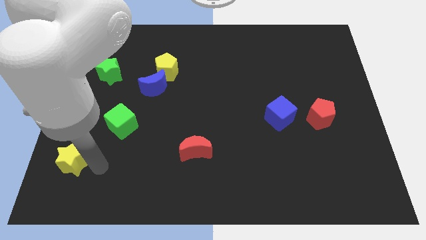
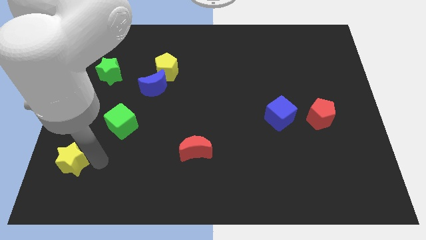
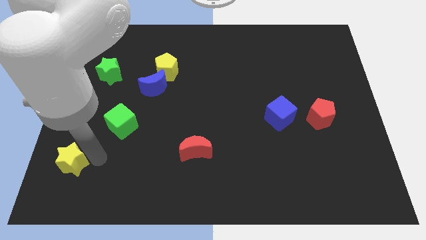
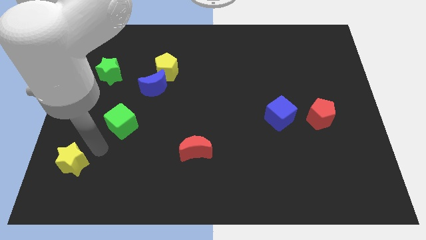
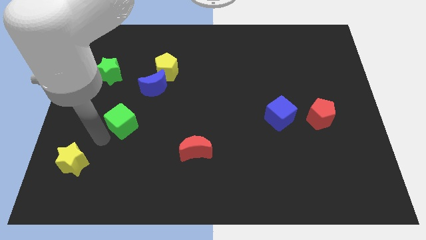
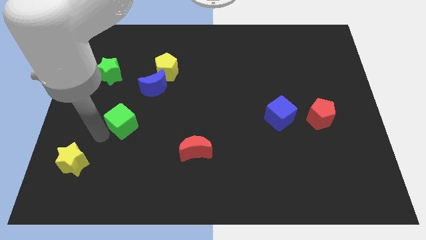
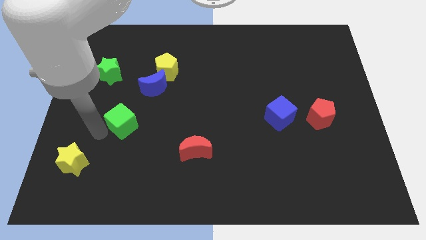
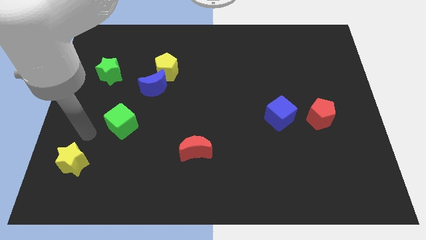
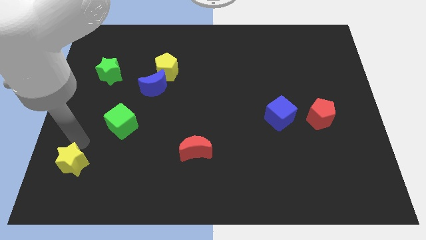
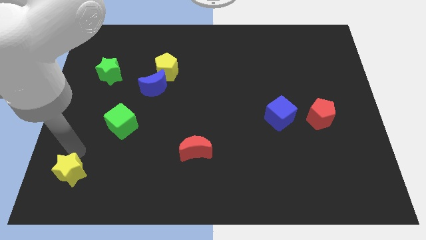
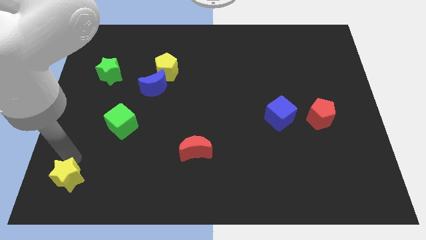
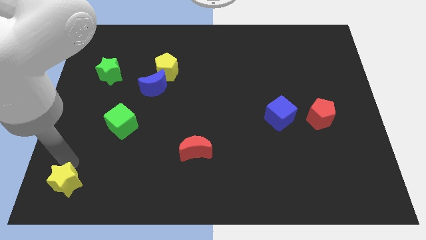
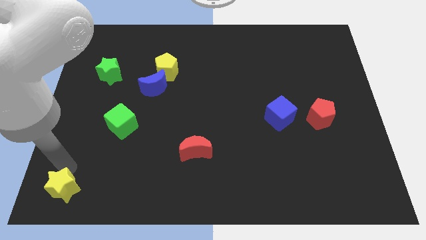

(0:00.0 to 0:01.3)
move yellow star slightly down

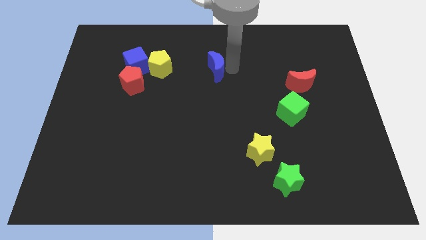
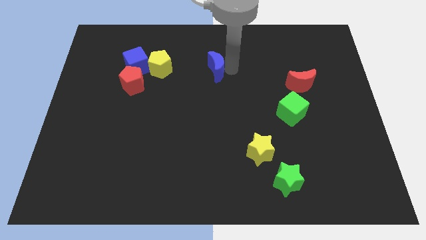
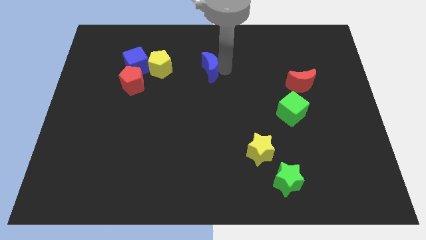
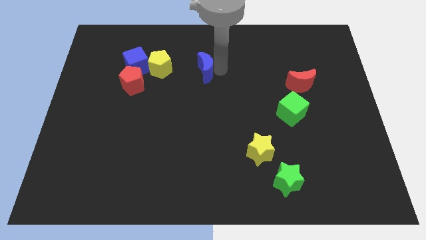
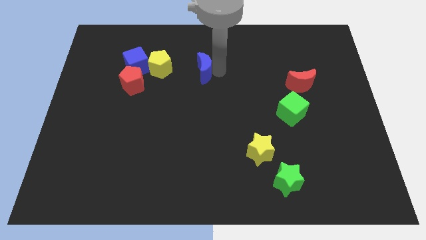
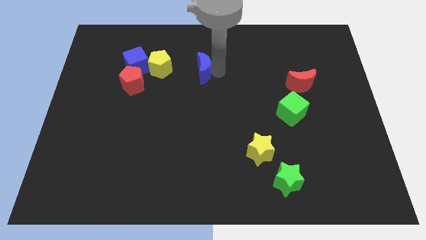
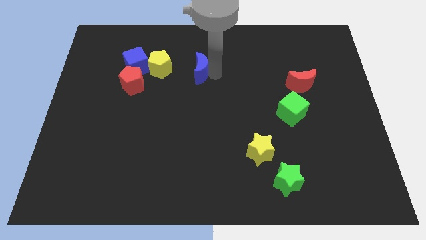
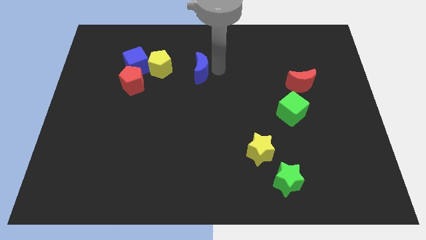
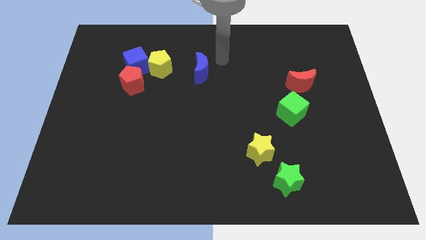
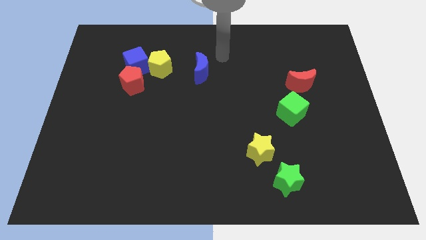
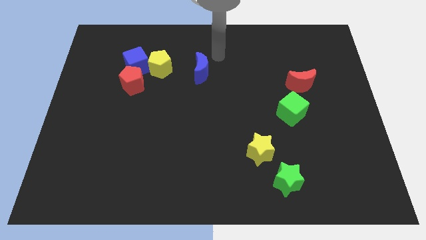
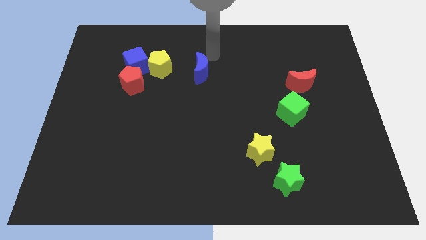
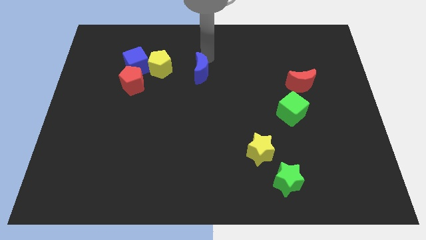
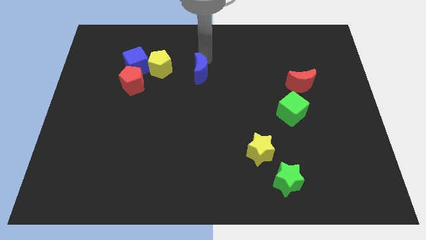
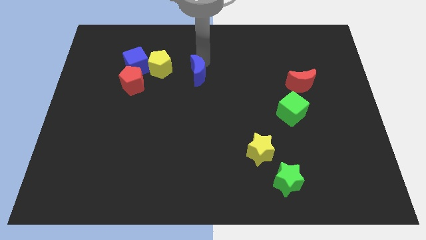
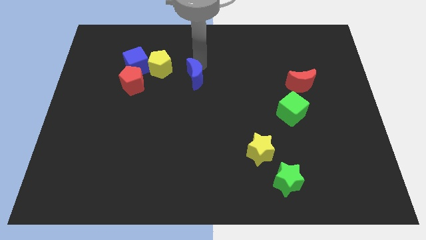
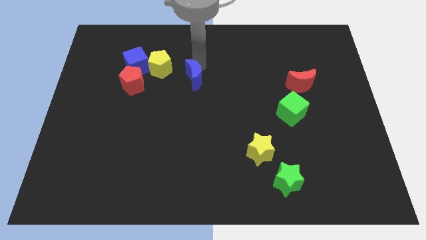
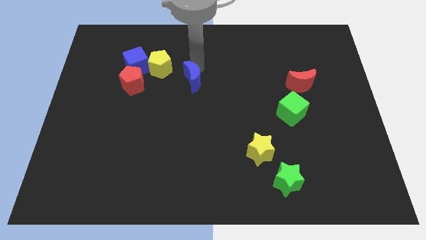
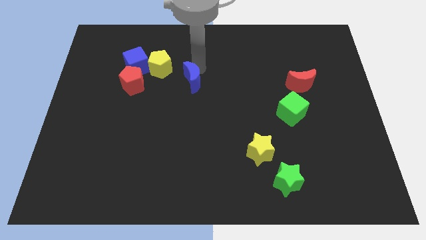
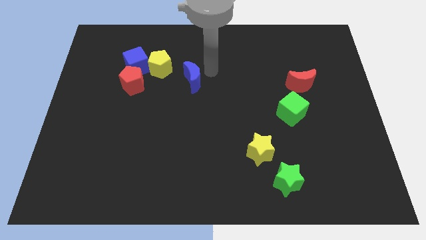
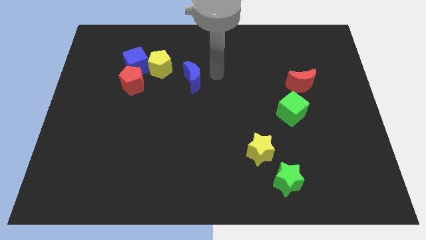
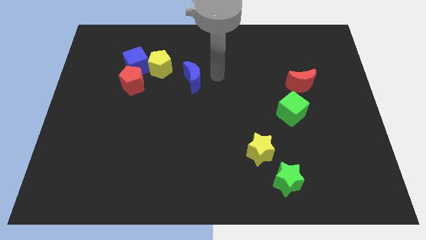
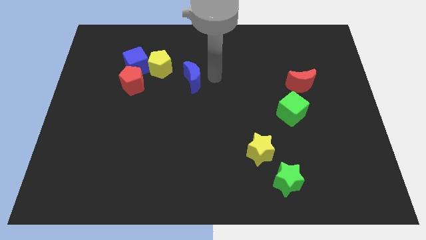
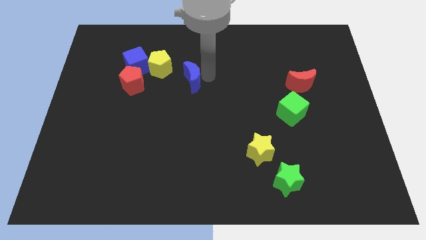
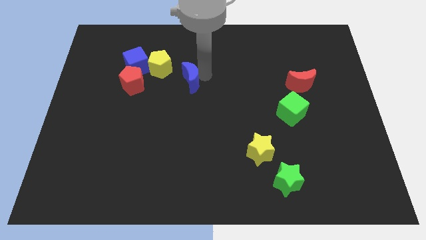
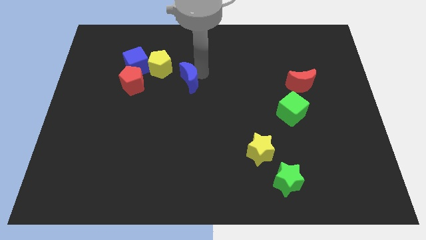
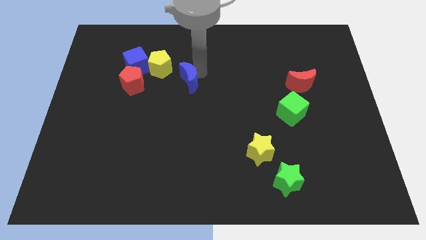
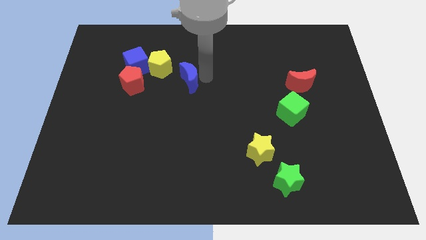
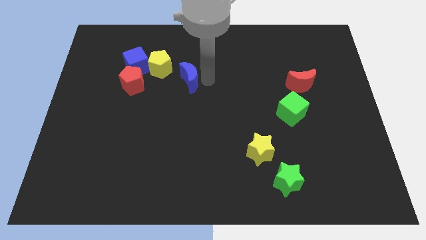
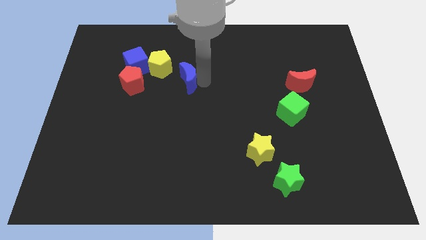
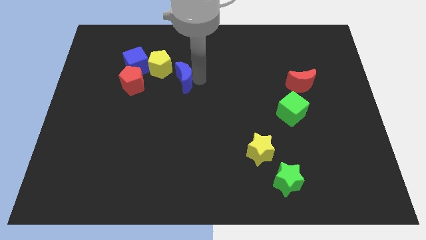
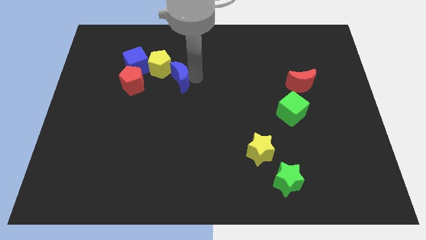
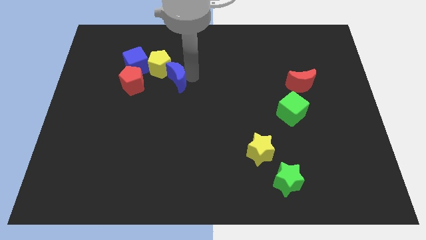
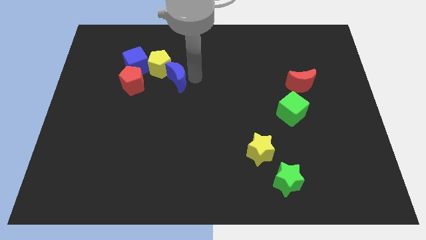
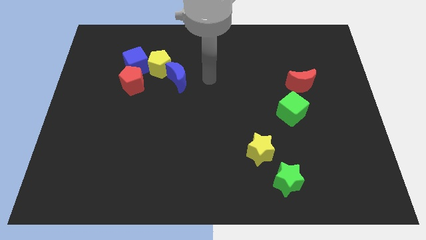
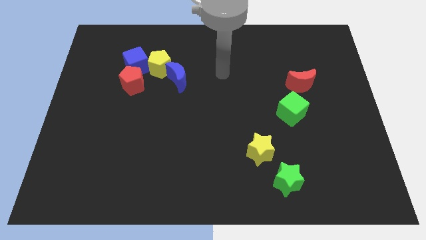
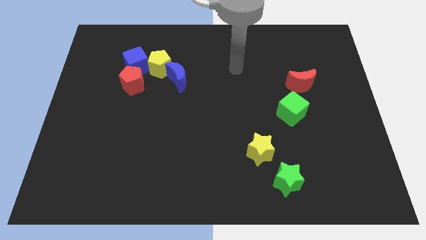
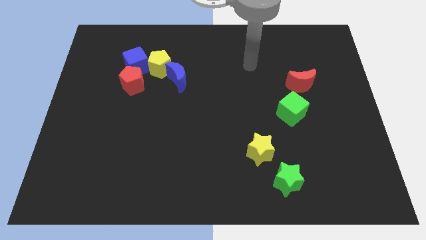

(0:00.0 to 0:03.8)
move the blue moon into the yellow pentagon

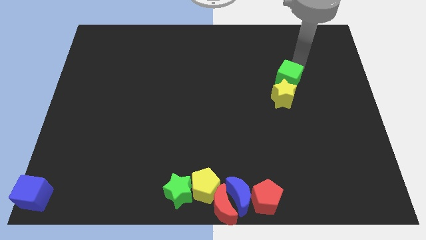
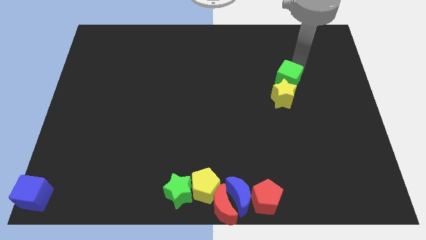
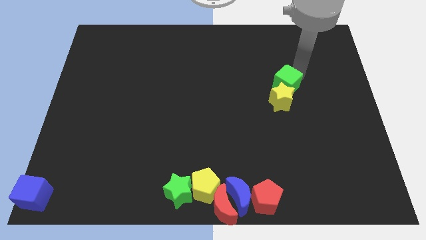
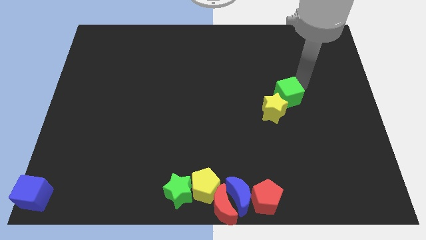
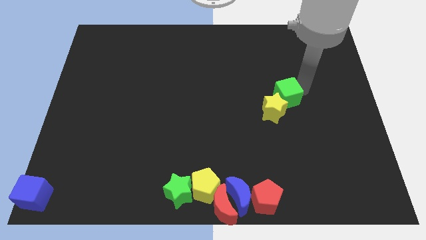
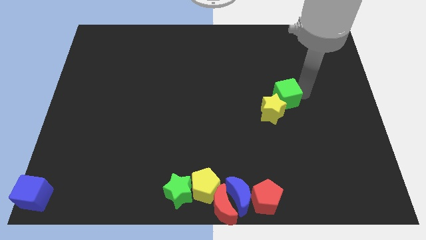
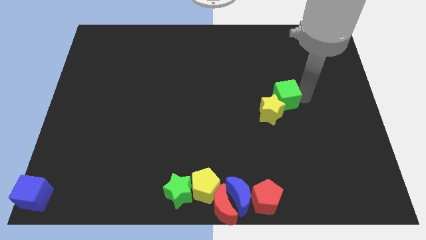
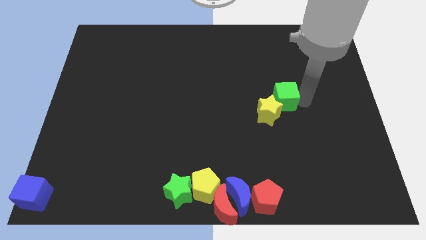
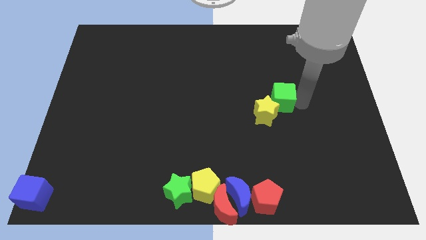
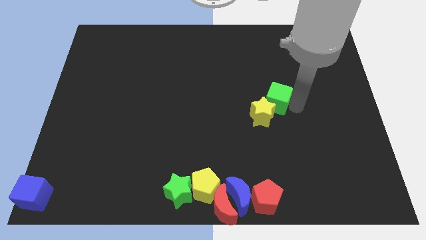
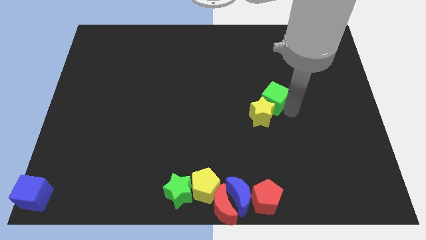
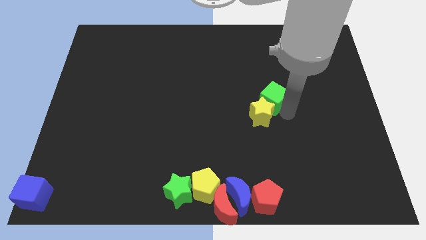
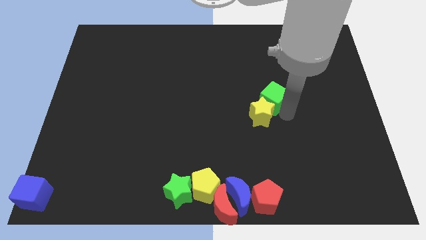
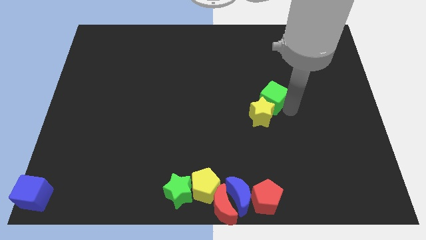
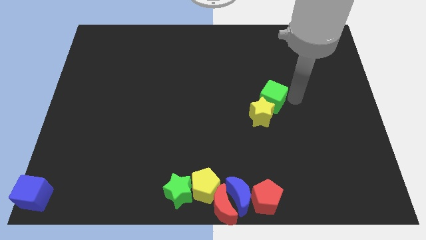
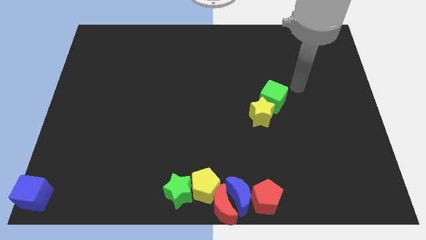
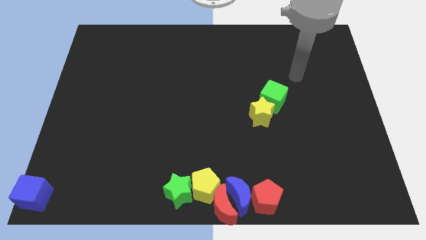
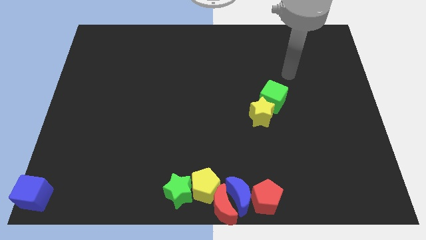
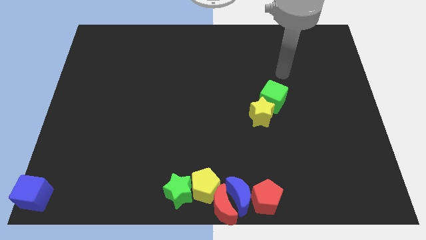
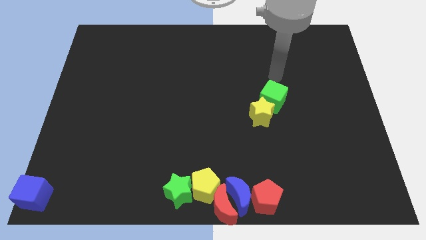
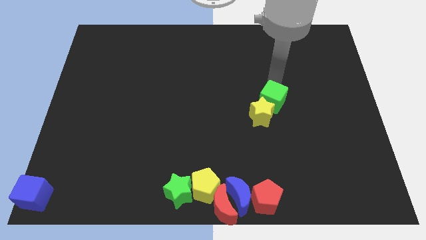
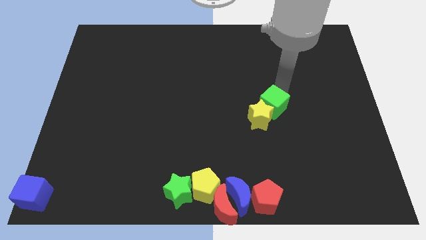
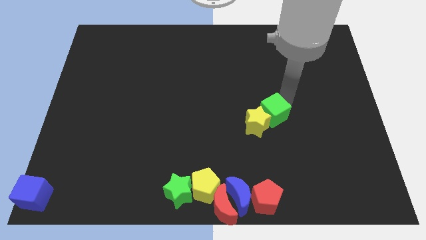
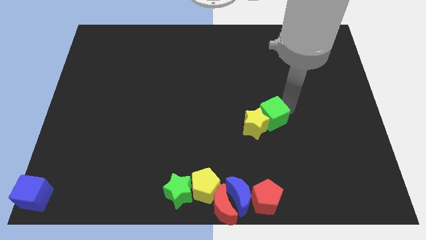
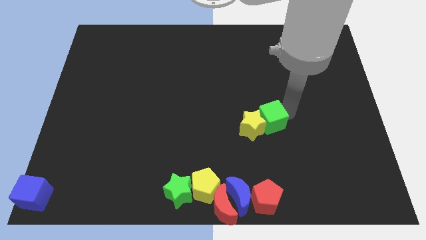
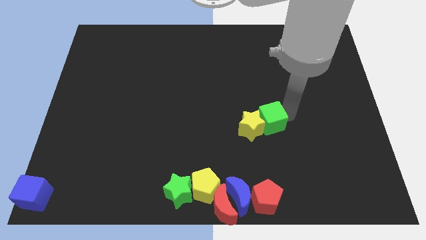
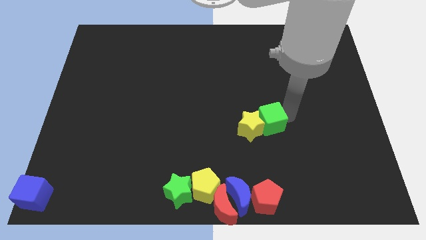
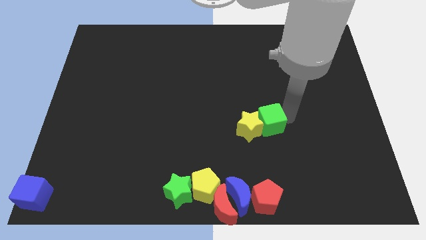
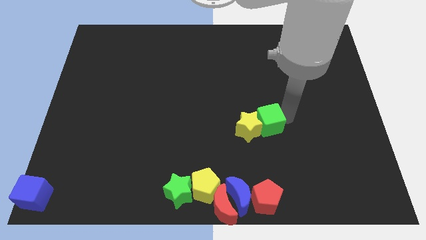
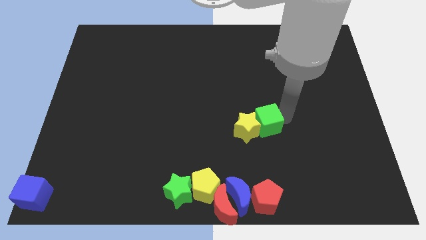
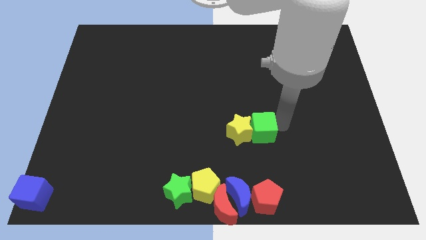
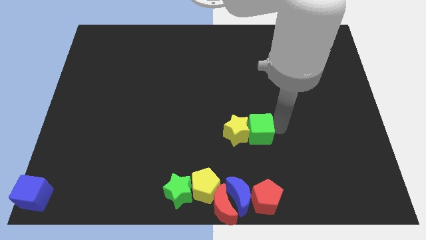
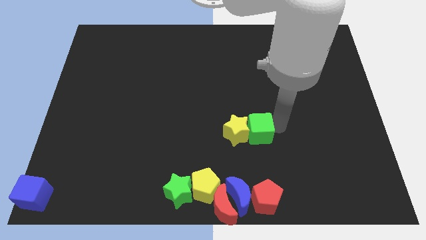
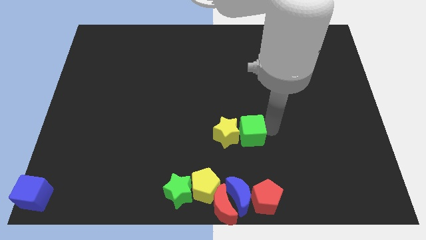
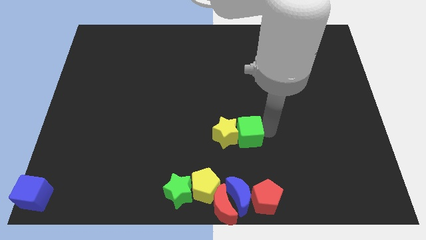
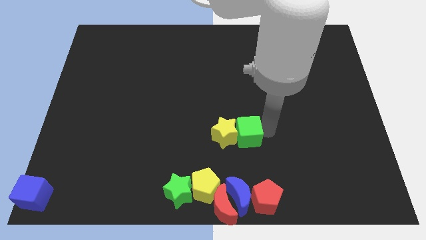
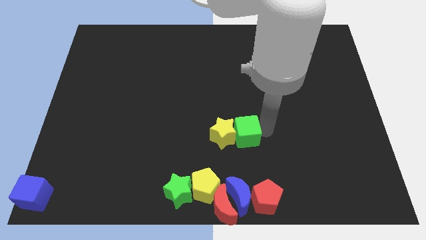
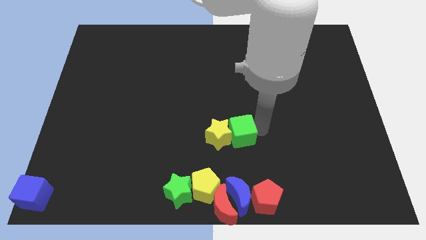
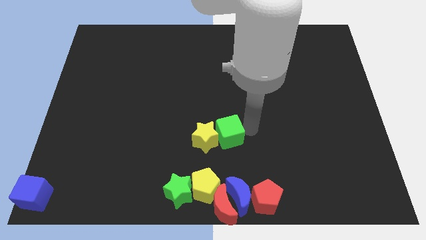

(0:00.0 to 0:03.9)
place the yellow star above the yellow pentagon
